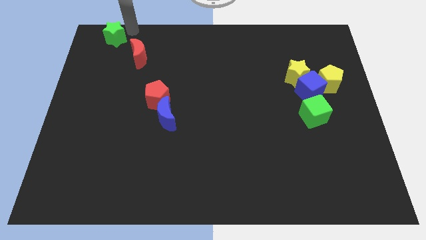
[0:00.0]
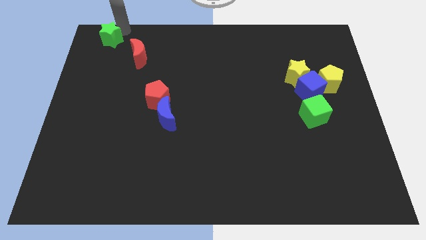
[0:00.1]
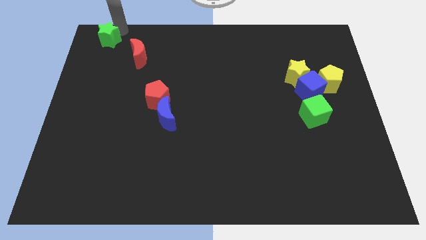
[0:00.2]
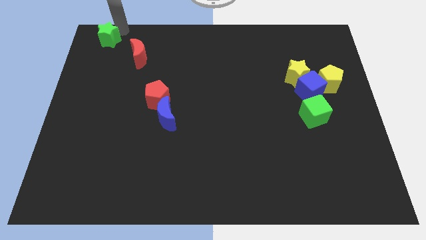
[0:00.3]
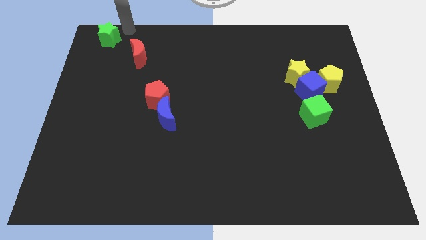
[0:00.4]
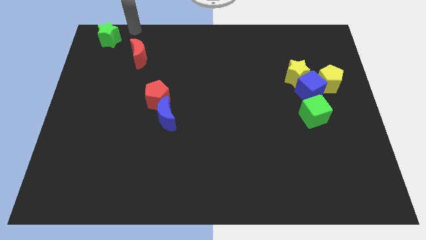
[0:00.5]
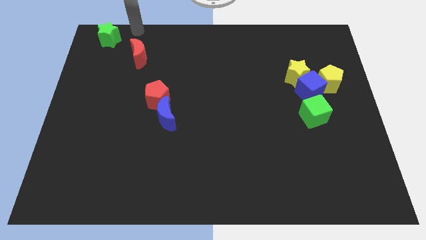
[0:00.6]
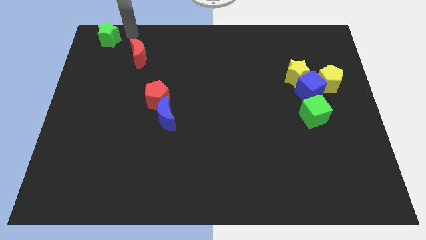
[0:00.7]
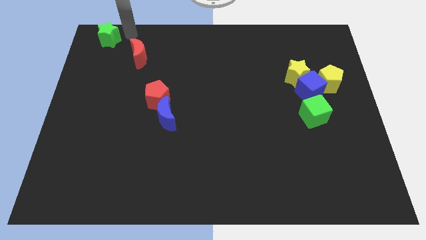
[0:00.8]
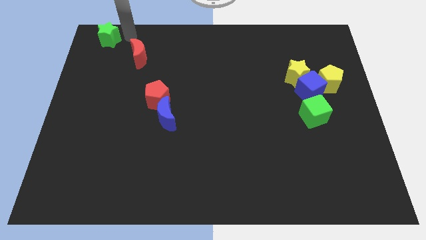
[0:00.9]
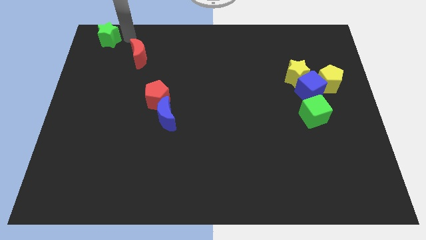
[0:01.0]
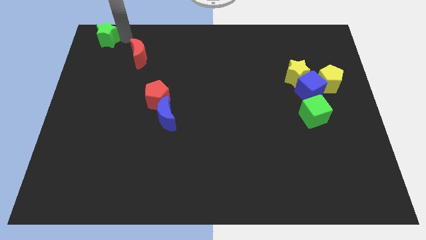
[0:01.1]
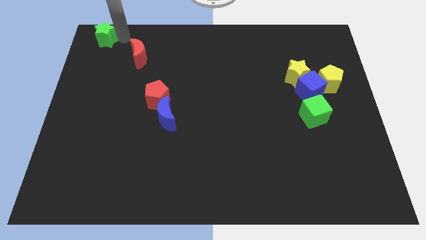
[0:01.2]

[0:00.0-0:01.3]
place green star to the top left corner of the board

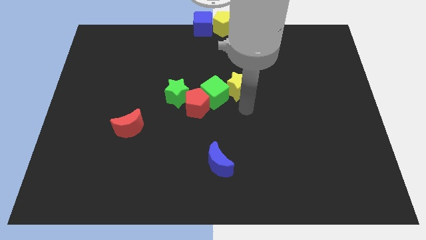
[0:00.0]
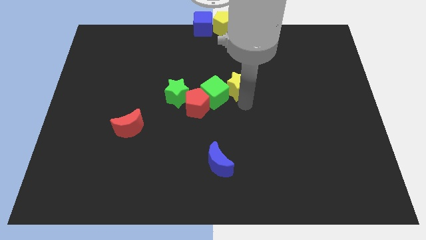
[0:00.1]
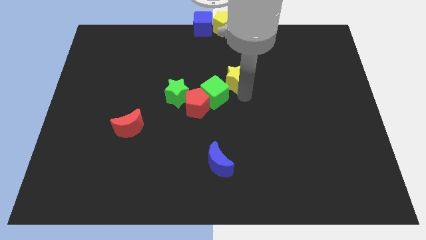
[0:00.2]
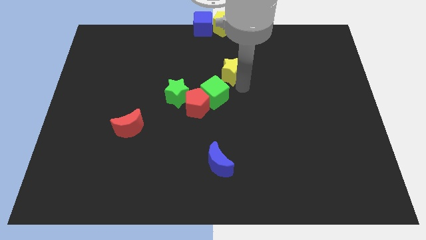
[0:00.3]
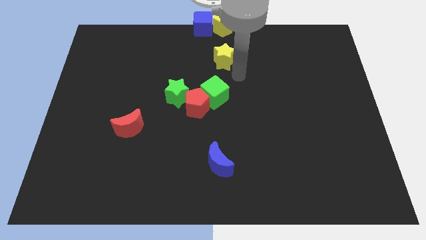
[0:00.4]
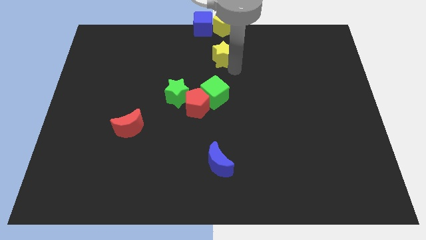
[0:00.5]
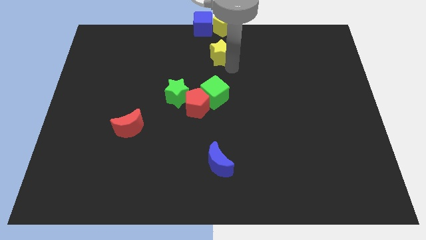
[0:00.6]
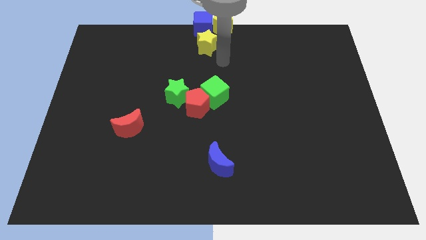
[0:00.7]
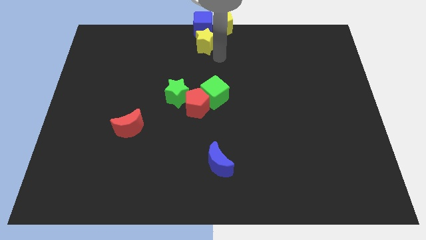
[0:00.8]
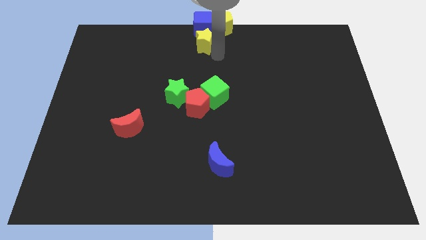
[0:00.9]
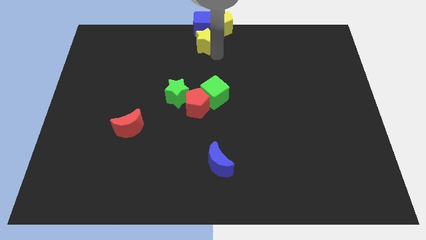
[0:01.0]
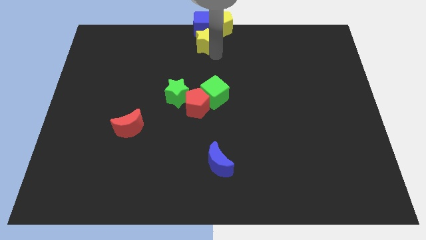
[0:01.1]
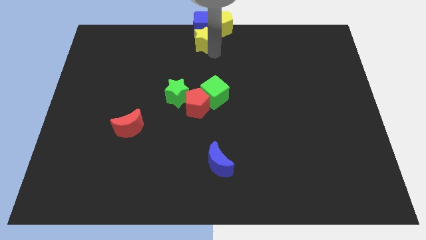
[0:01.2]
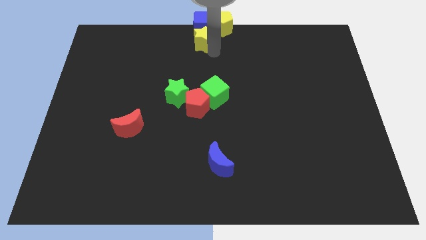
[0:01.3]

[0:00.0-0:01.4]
move the yellow star below the blue cube

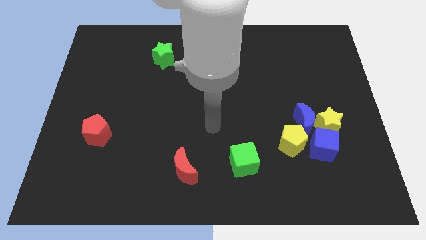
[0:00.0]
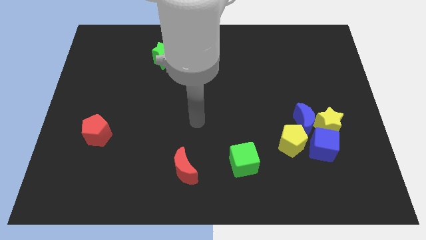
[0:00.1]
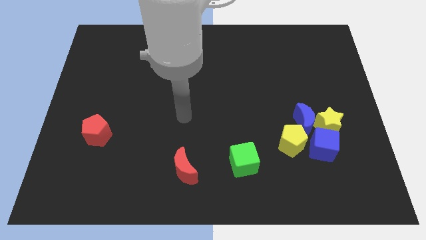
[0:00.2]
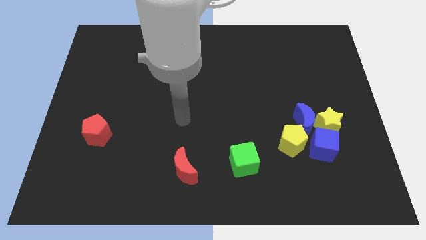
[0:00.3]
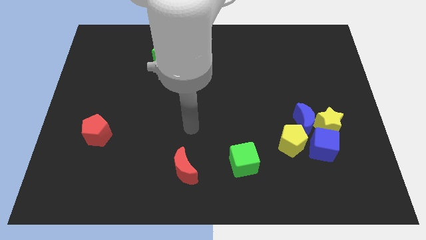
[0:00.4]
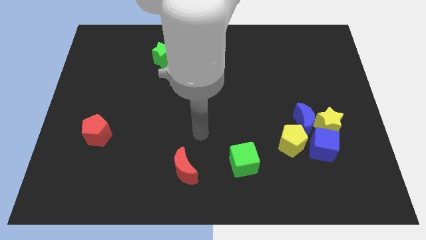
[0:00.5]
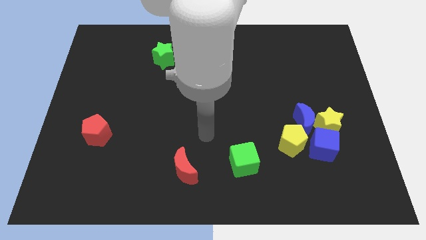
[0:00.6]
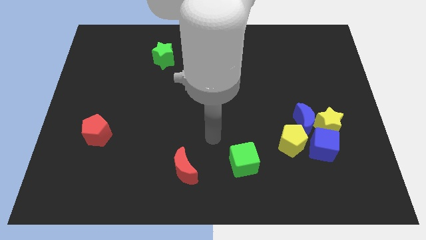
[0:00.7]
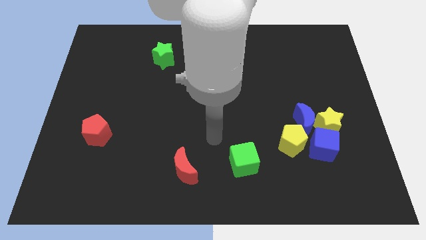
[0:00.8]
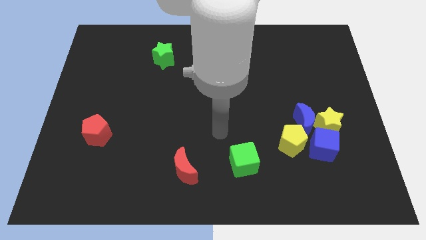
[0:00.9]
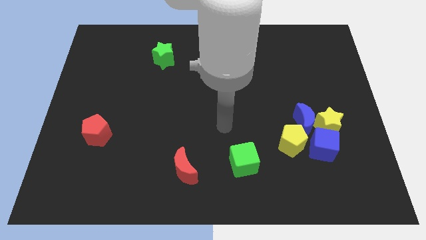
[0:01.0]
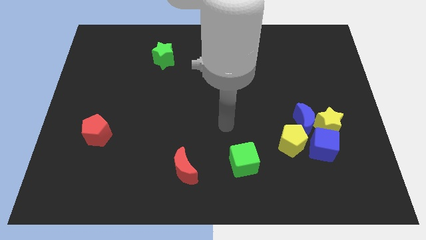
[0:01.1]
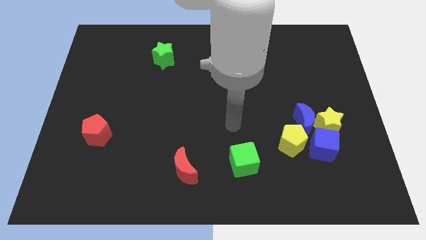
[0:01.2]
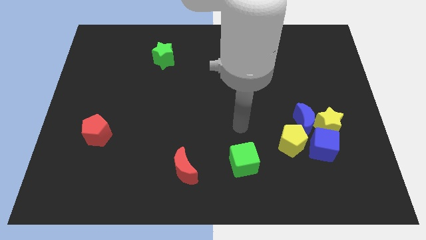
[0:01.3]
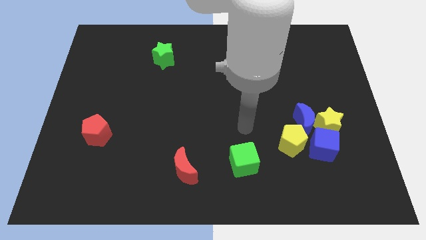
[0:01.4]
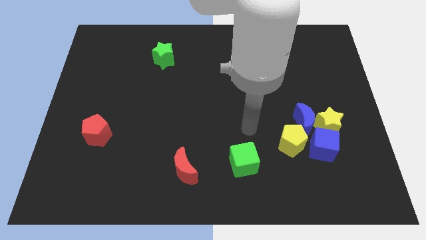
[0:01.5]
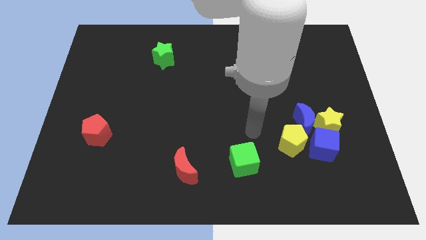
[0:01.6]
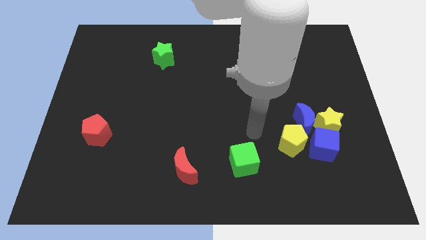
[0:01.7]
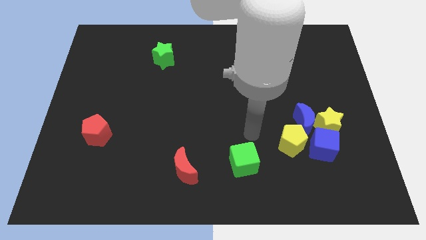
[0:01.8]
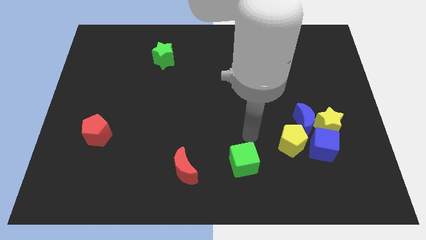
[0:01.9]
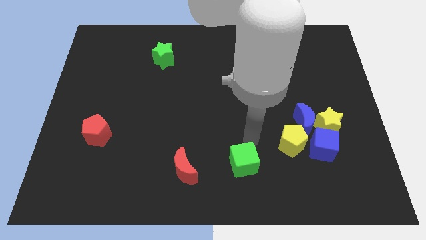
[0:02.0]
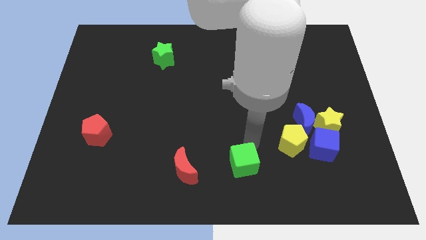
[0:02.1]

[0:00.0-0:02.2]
touch the top side of the green cube

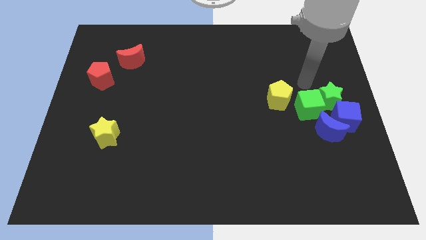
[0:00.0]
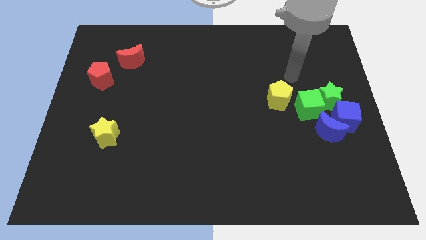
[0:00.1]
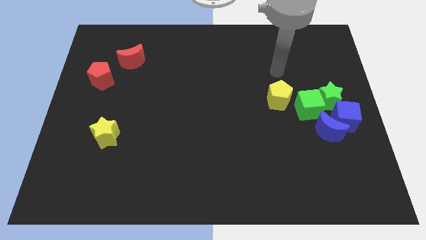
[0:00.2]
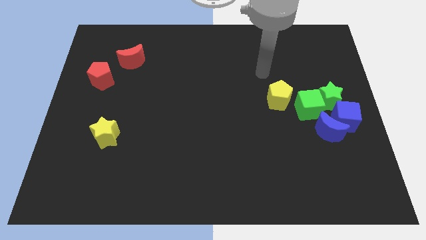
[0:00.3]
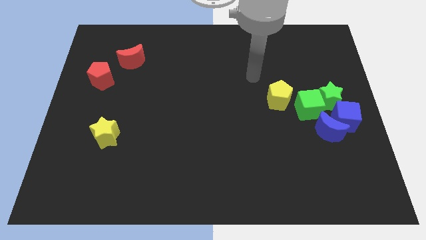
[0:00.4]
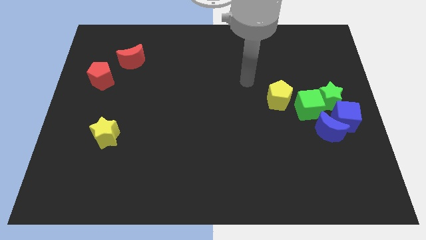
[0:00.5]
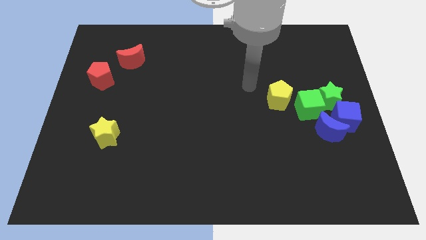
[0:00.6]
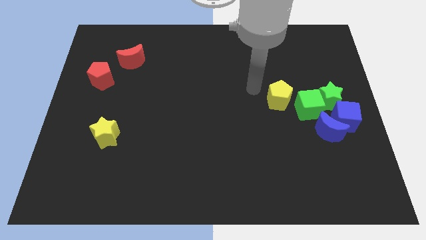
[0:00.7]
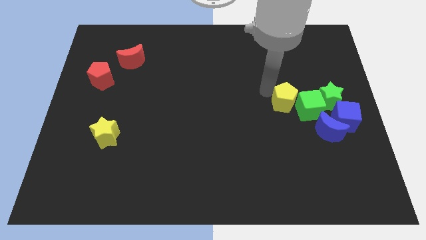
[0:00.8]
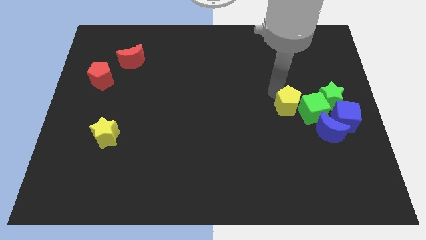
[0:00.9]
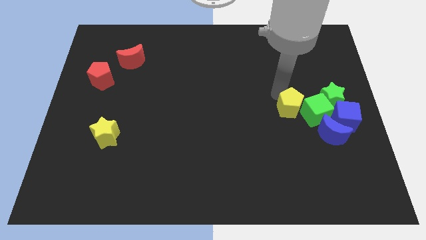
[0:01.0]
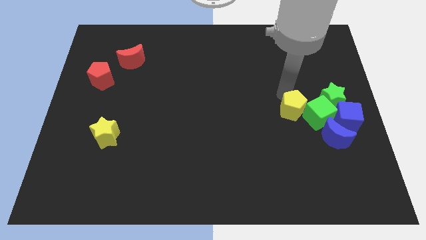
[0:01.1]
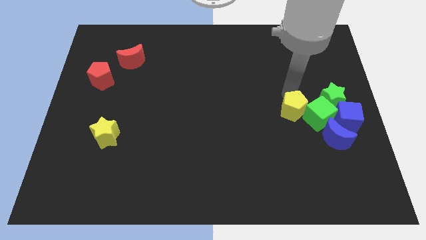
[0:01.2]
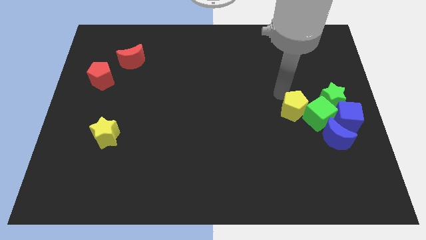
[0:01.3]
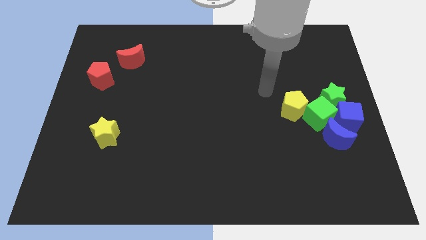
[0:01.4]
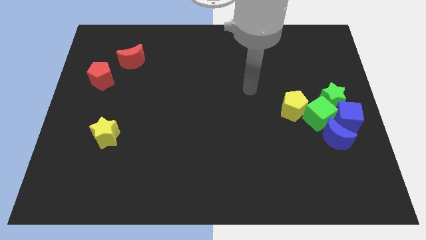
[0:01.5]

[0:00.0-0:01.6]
push the yellow pentagon into the group of blocks

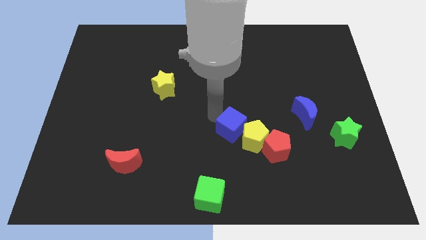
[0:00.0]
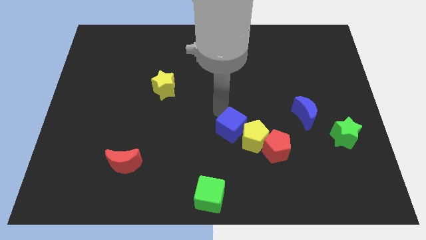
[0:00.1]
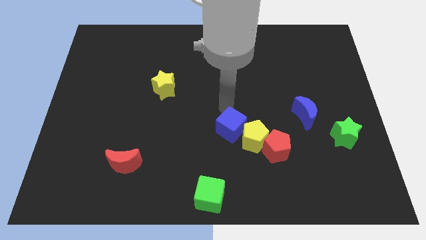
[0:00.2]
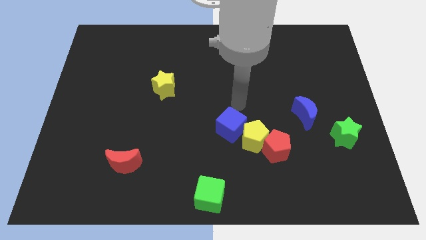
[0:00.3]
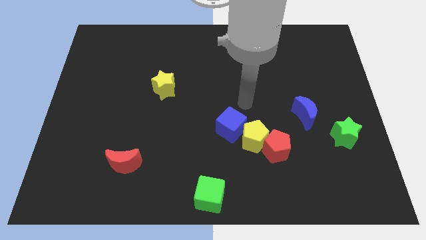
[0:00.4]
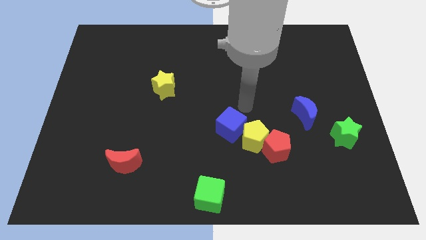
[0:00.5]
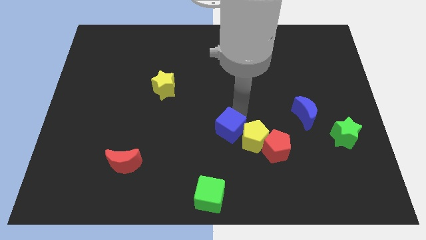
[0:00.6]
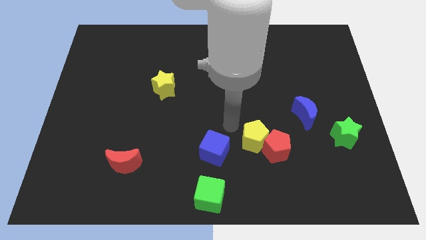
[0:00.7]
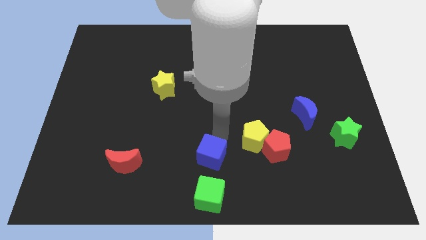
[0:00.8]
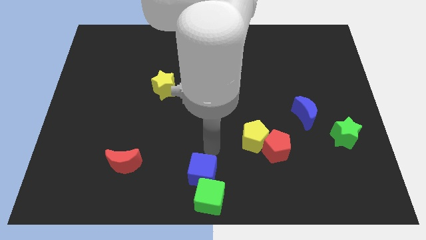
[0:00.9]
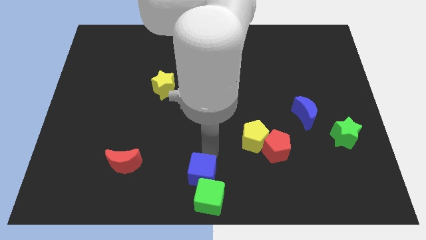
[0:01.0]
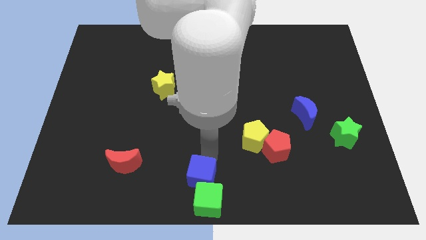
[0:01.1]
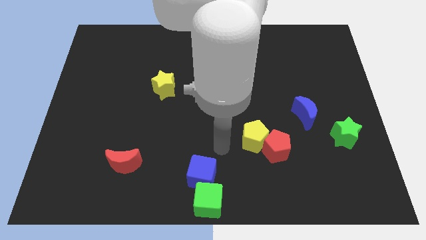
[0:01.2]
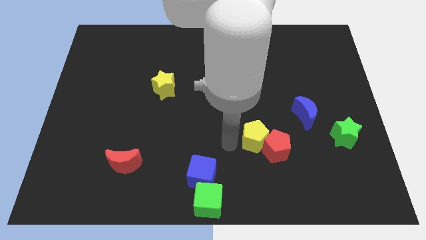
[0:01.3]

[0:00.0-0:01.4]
push the blue cube into the top side of the green cube

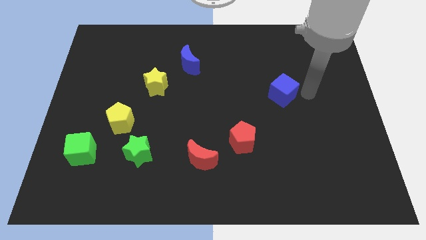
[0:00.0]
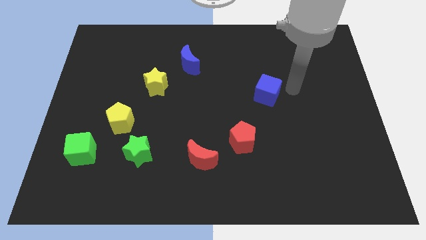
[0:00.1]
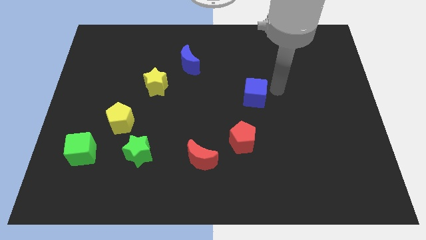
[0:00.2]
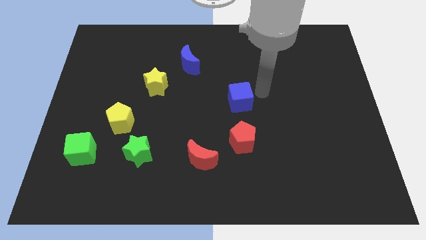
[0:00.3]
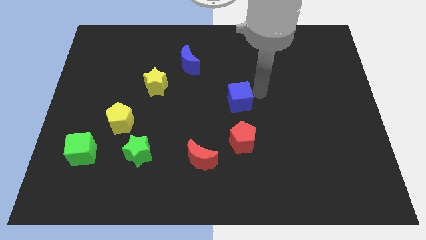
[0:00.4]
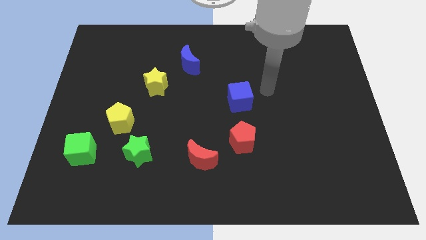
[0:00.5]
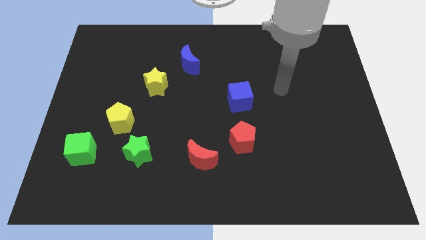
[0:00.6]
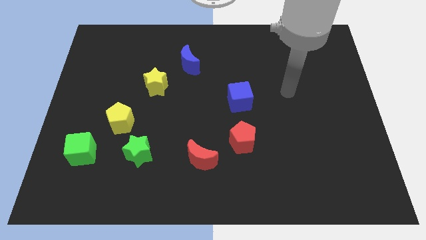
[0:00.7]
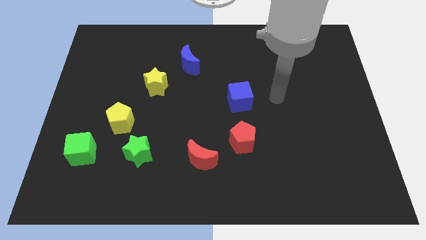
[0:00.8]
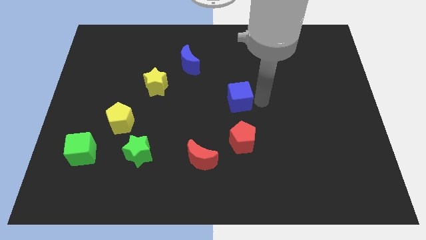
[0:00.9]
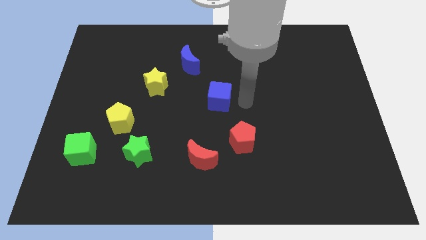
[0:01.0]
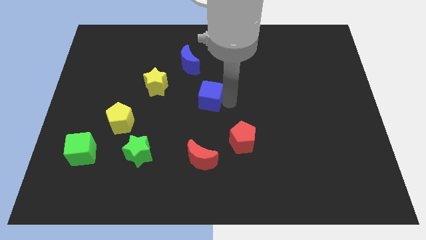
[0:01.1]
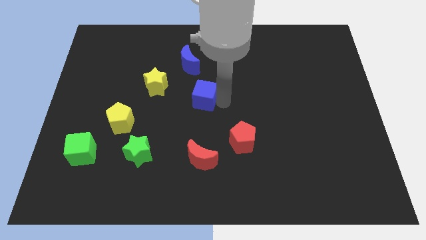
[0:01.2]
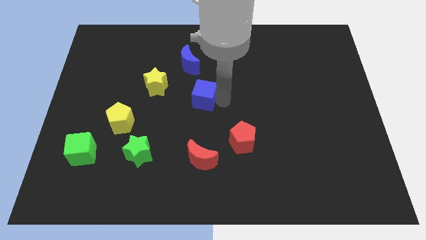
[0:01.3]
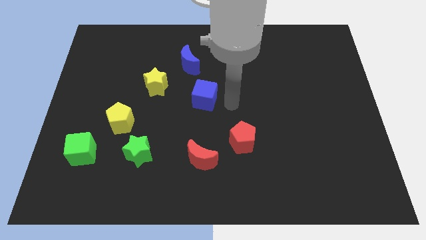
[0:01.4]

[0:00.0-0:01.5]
move the blue cube down to the blue moon
